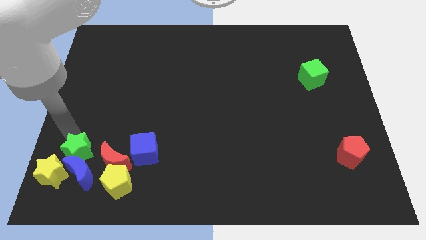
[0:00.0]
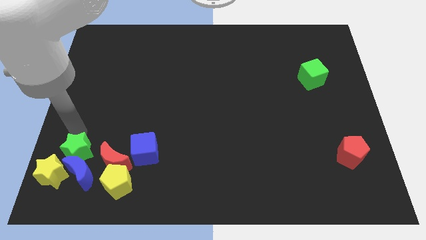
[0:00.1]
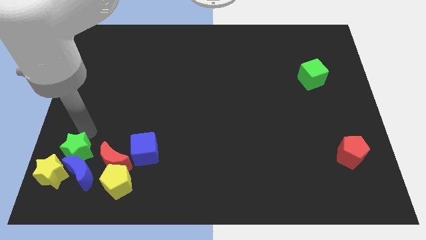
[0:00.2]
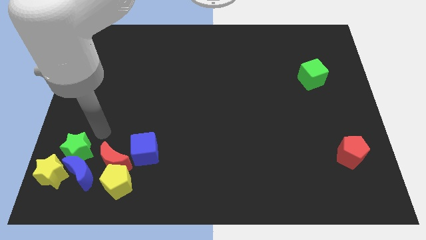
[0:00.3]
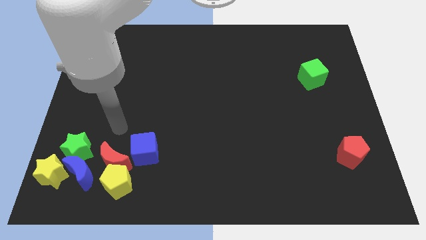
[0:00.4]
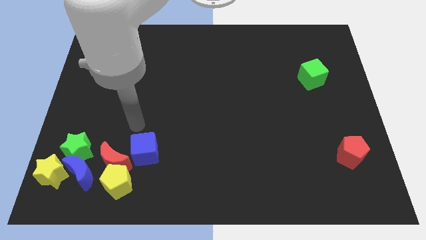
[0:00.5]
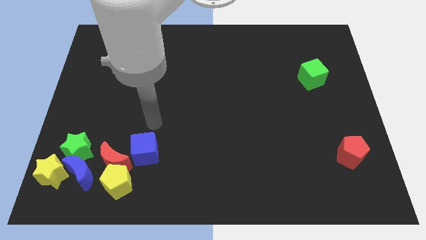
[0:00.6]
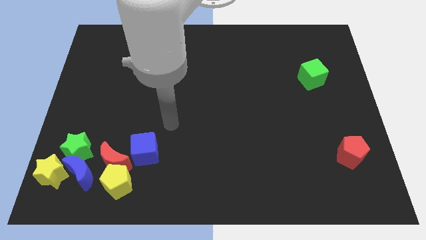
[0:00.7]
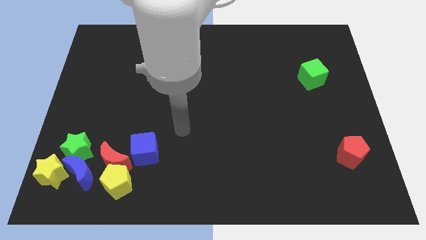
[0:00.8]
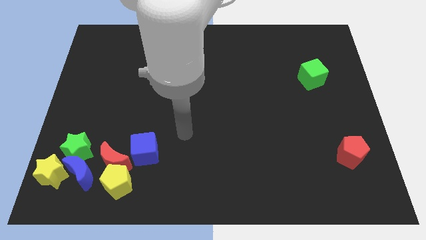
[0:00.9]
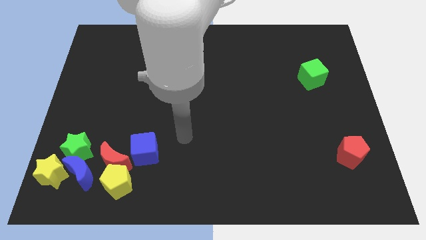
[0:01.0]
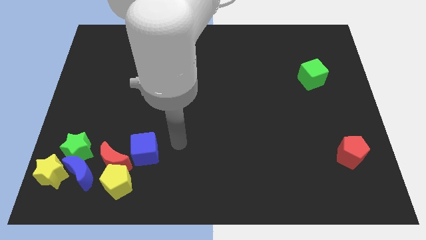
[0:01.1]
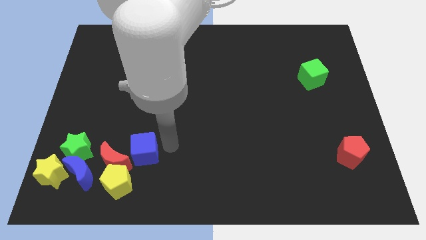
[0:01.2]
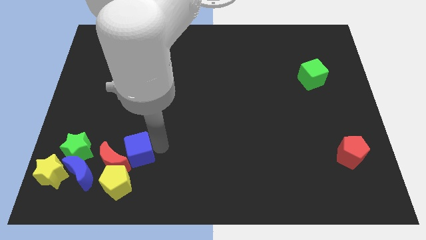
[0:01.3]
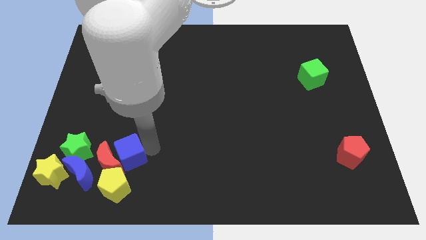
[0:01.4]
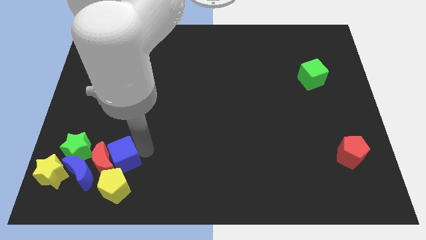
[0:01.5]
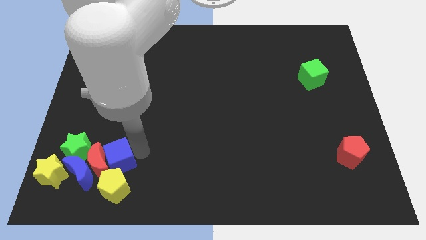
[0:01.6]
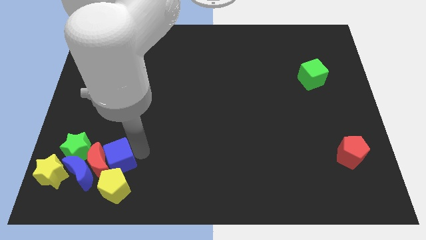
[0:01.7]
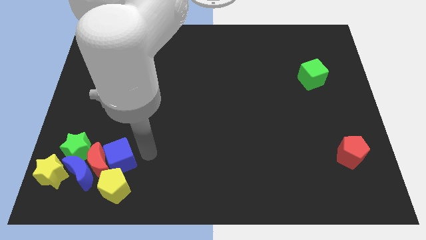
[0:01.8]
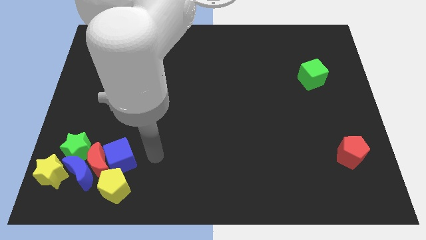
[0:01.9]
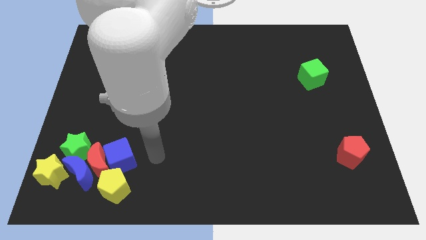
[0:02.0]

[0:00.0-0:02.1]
slide blue cube close to red moon

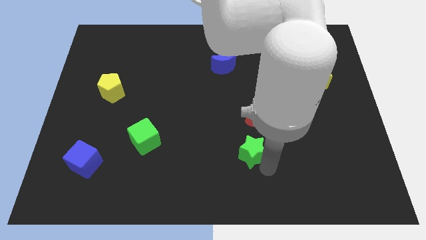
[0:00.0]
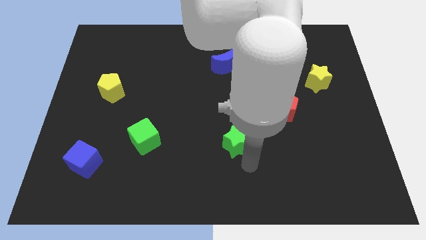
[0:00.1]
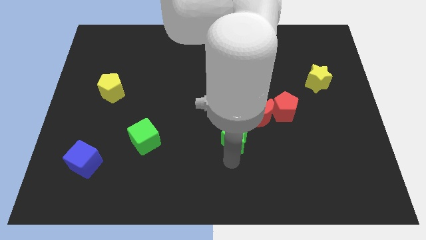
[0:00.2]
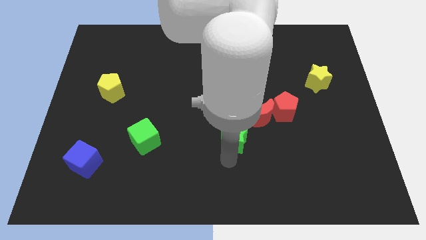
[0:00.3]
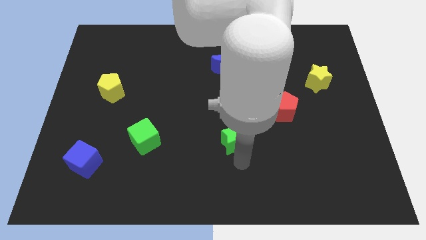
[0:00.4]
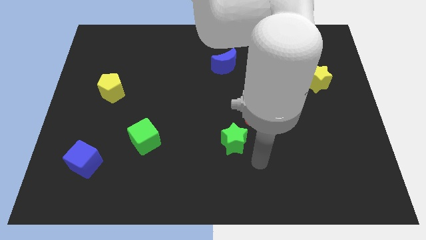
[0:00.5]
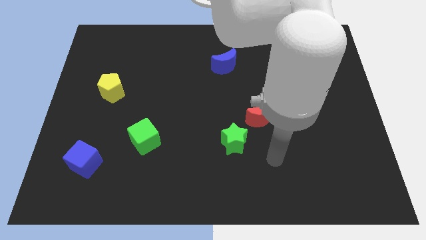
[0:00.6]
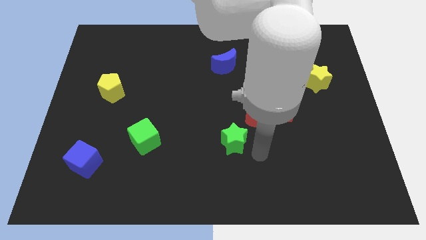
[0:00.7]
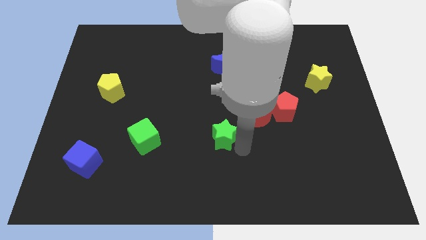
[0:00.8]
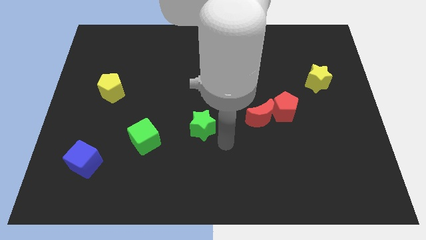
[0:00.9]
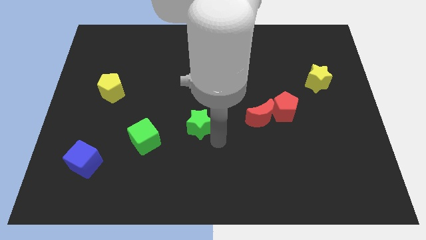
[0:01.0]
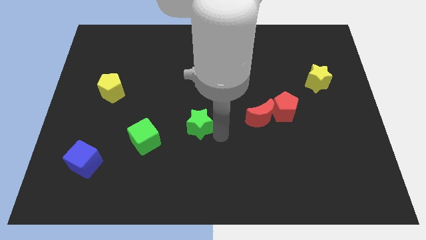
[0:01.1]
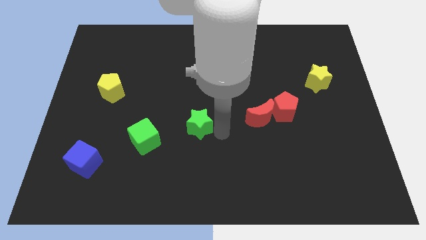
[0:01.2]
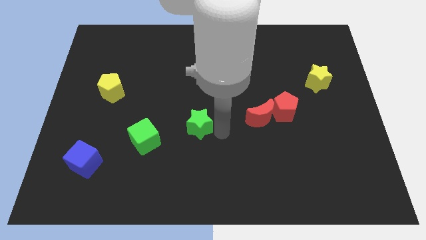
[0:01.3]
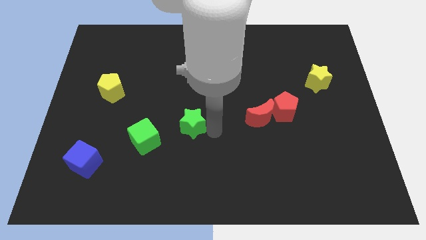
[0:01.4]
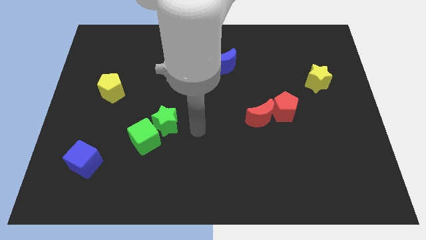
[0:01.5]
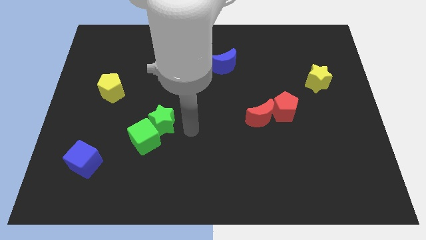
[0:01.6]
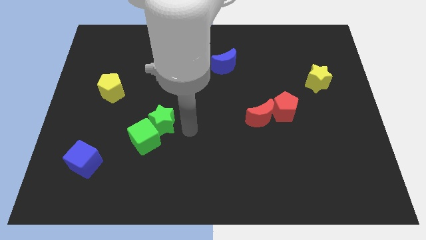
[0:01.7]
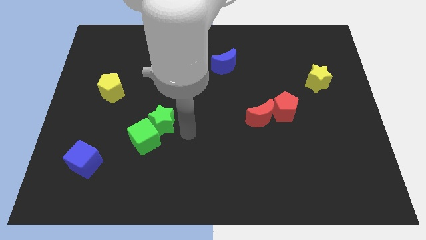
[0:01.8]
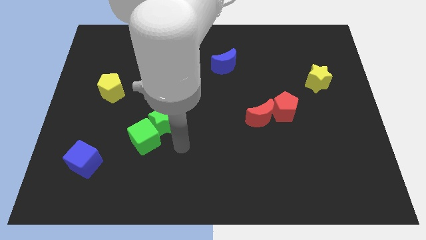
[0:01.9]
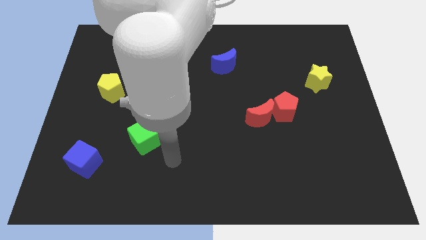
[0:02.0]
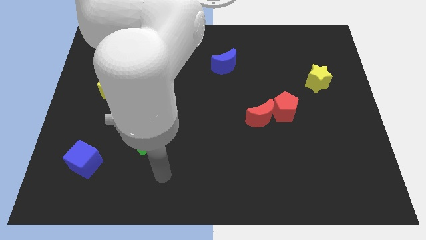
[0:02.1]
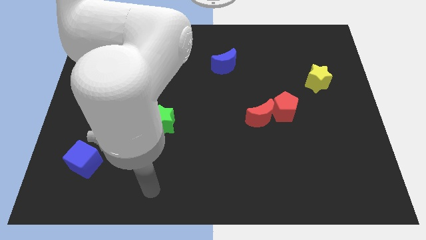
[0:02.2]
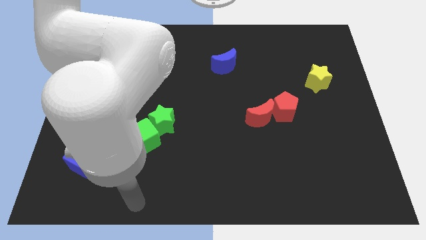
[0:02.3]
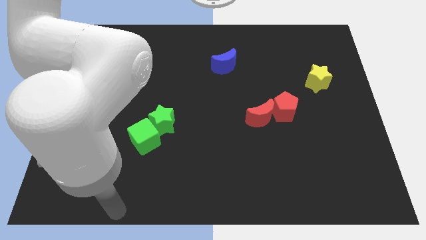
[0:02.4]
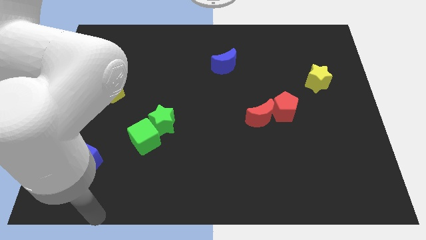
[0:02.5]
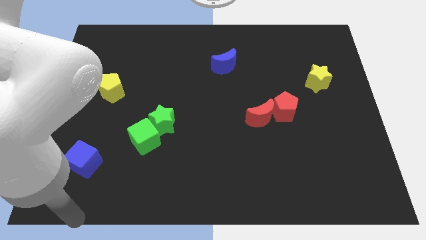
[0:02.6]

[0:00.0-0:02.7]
move the green star into the green cube

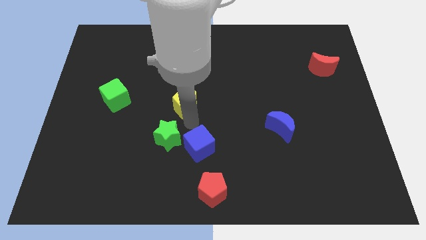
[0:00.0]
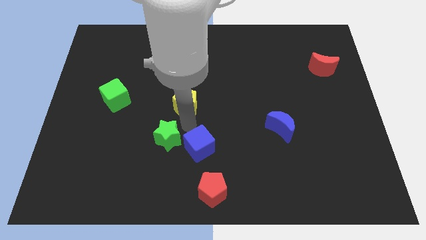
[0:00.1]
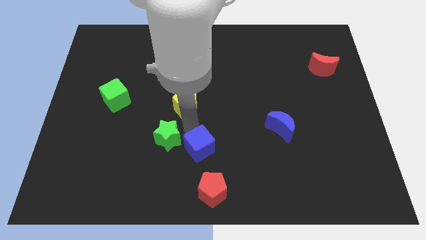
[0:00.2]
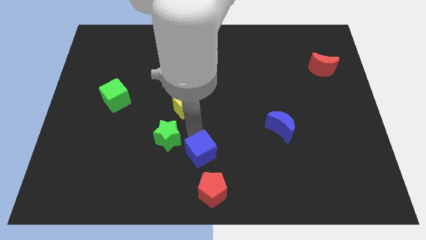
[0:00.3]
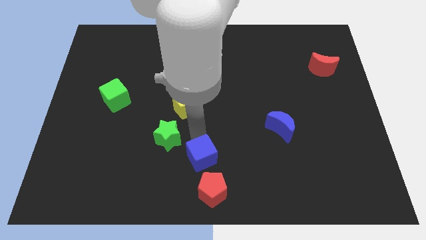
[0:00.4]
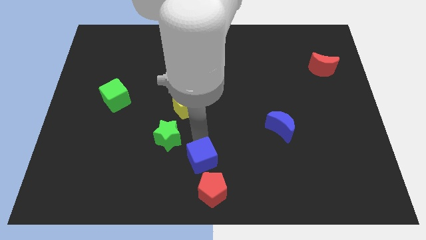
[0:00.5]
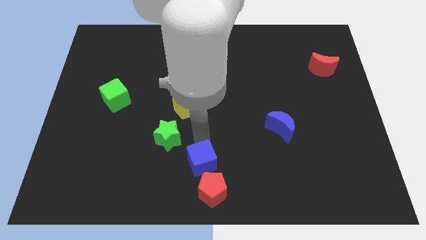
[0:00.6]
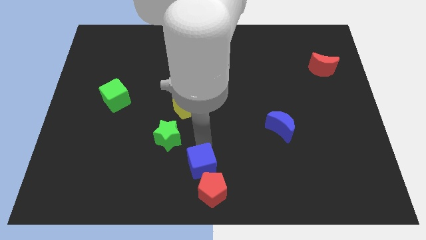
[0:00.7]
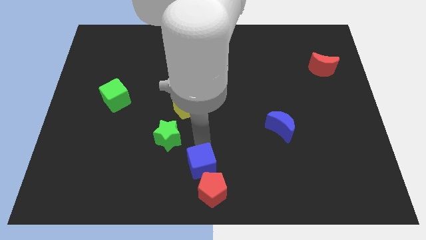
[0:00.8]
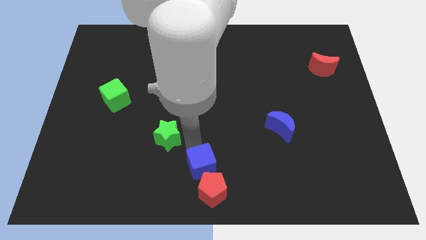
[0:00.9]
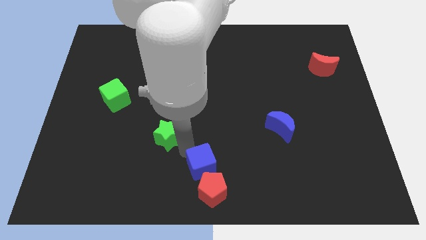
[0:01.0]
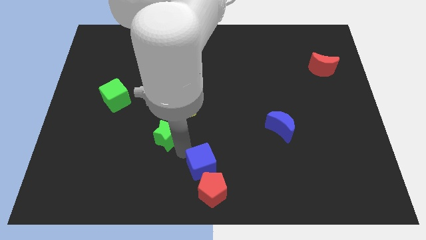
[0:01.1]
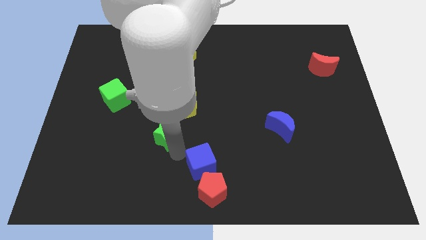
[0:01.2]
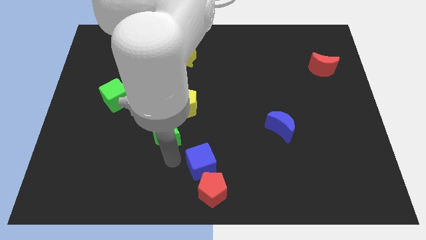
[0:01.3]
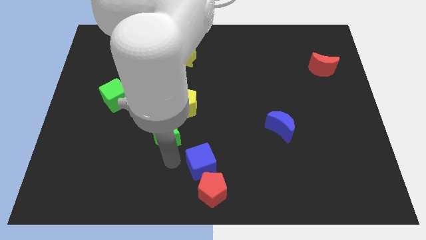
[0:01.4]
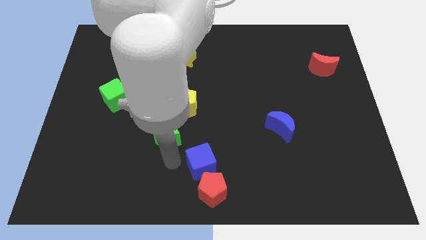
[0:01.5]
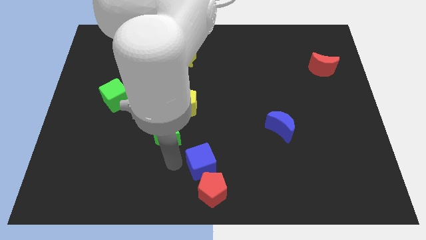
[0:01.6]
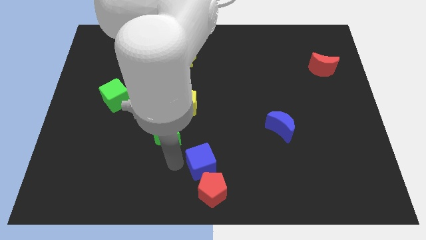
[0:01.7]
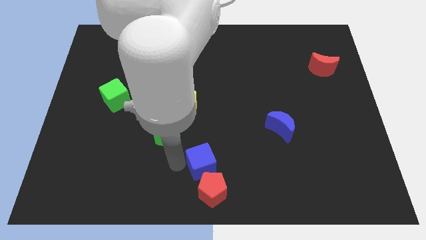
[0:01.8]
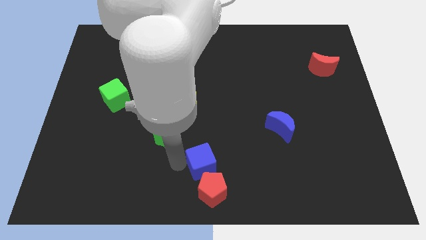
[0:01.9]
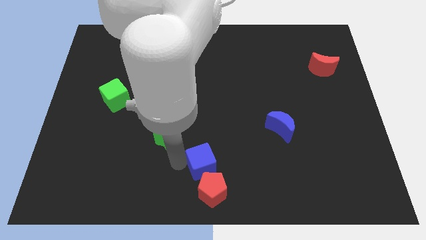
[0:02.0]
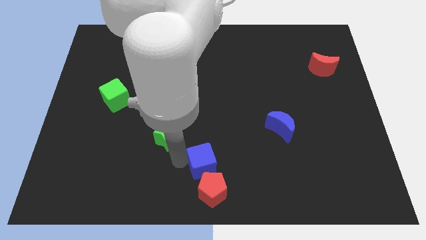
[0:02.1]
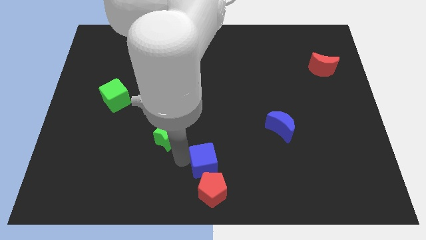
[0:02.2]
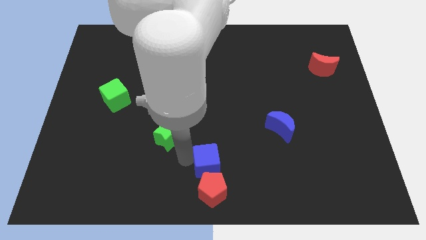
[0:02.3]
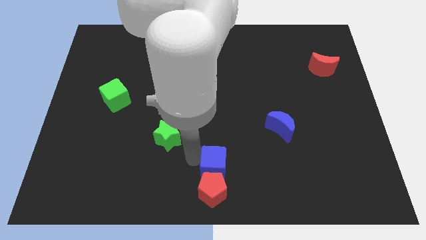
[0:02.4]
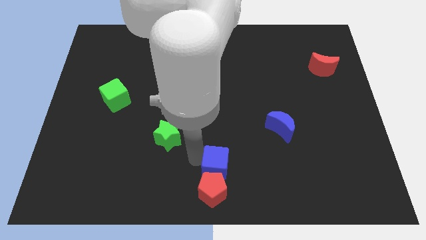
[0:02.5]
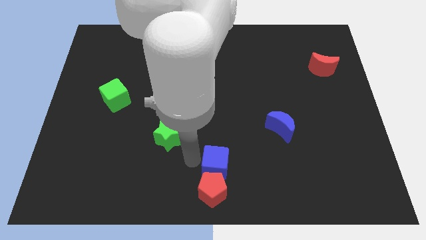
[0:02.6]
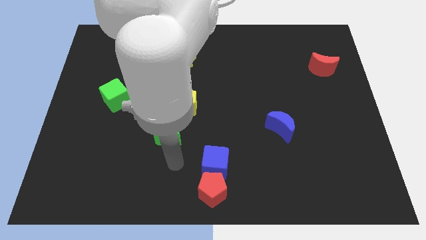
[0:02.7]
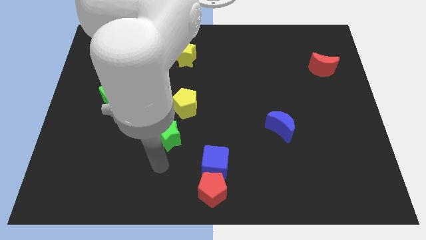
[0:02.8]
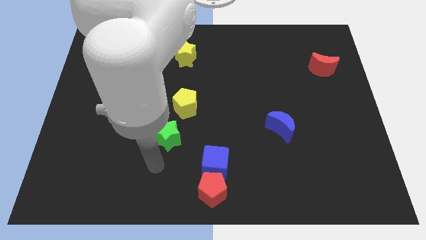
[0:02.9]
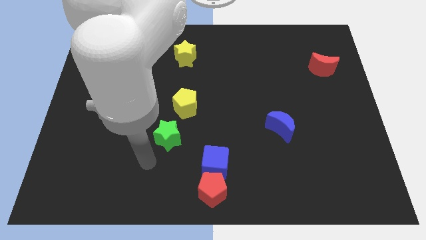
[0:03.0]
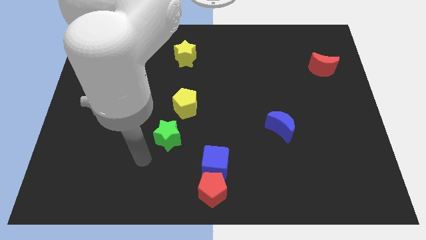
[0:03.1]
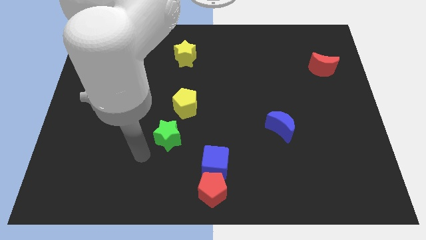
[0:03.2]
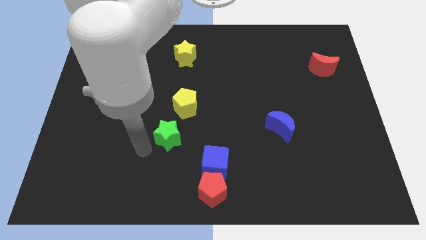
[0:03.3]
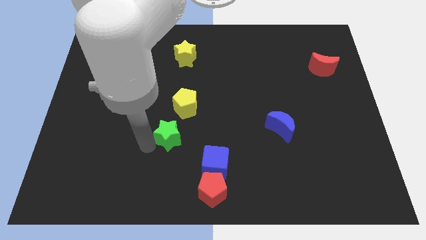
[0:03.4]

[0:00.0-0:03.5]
move the blue cube to the top side of the red pentagon

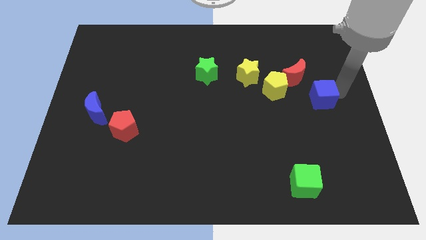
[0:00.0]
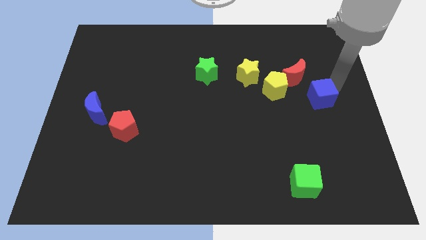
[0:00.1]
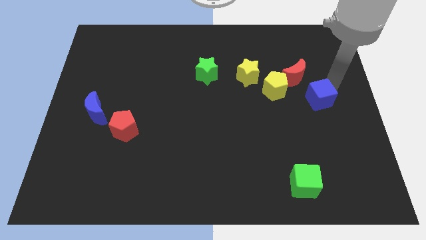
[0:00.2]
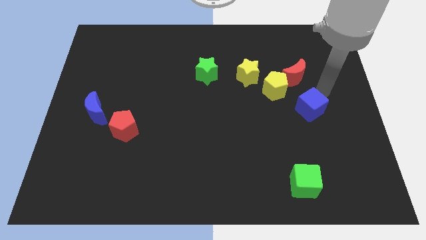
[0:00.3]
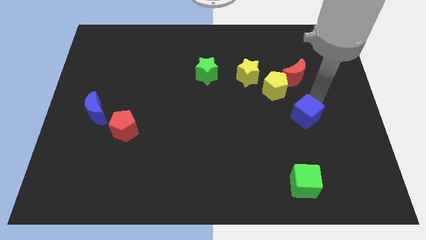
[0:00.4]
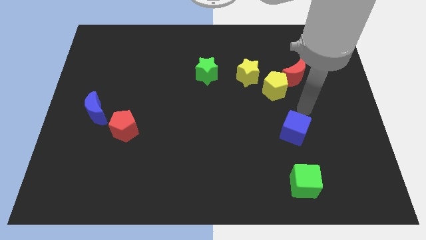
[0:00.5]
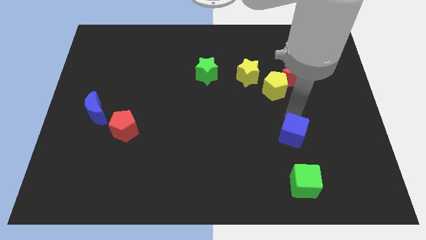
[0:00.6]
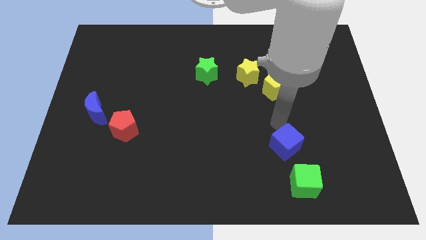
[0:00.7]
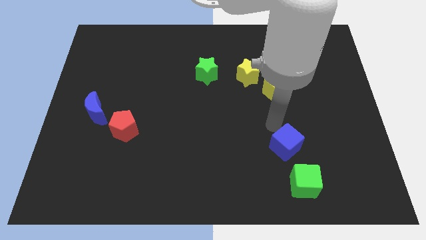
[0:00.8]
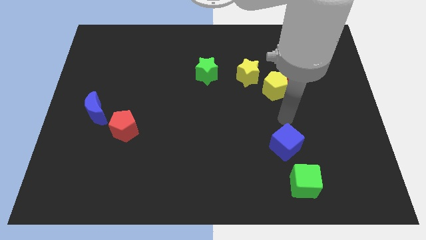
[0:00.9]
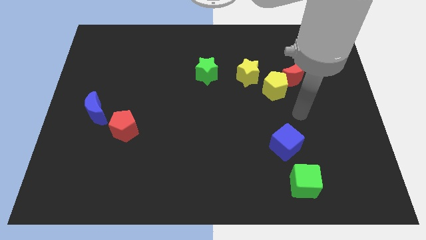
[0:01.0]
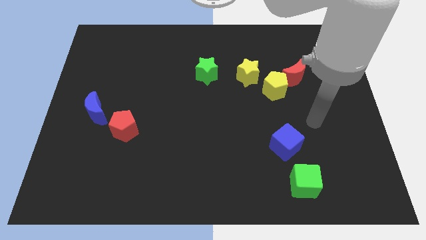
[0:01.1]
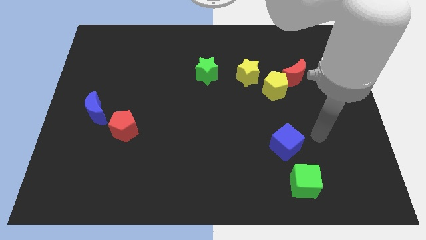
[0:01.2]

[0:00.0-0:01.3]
place the blue cube to the left top of the green cube
